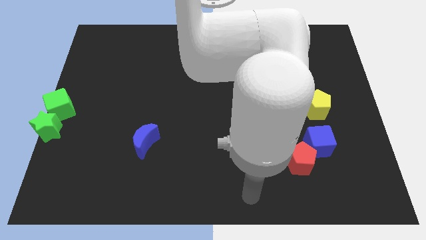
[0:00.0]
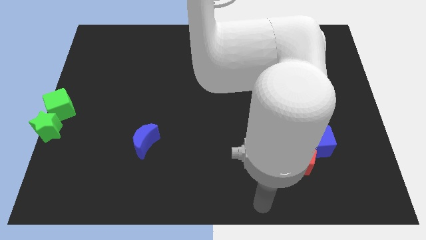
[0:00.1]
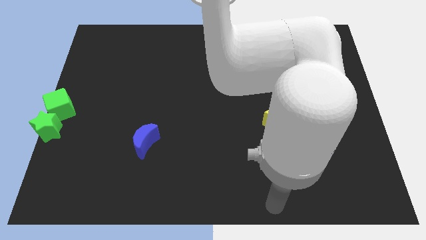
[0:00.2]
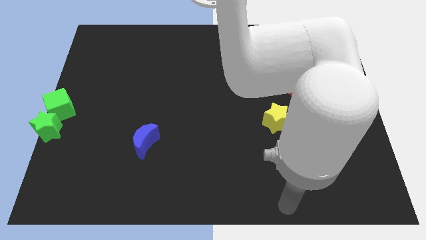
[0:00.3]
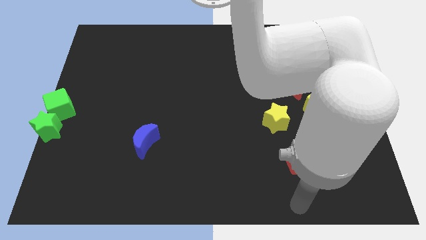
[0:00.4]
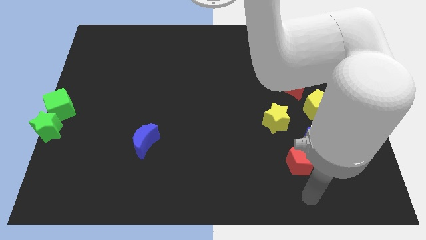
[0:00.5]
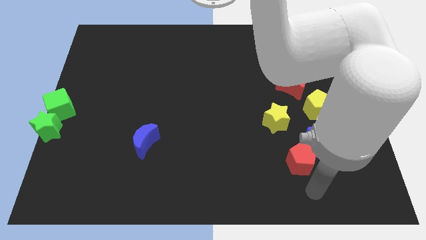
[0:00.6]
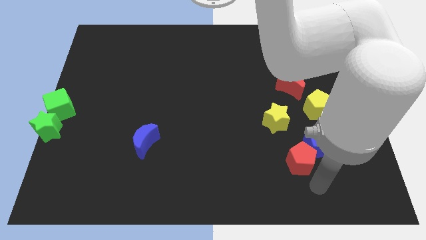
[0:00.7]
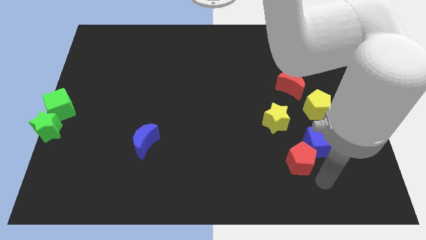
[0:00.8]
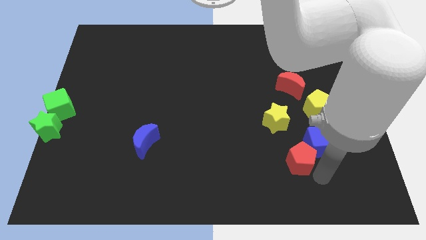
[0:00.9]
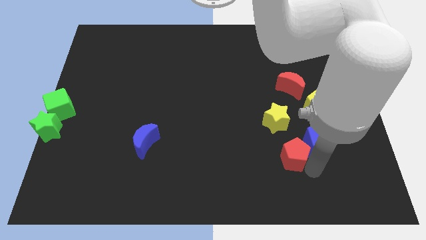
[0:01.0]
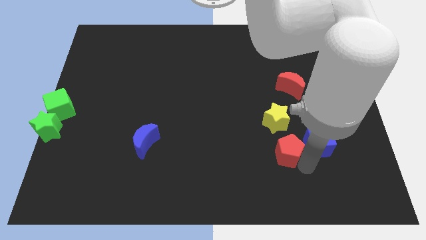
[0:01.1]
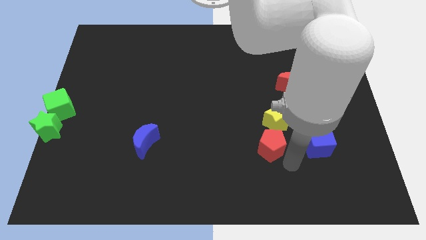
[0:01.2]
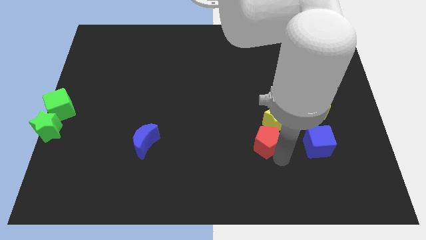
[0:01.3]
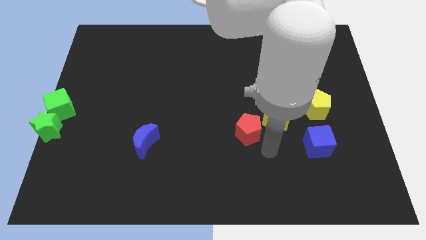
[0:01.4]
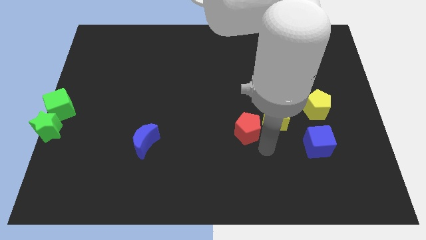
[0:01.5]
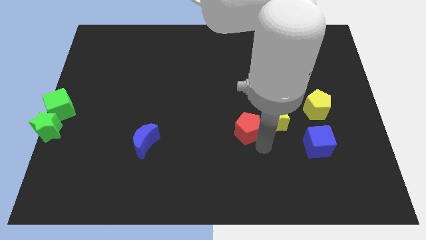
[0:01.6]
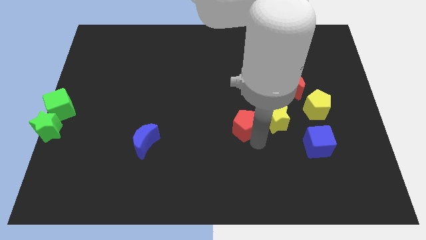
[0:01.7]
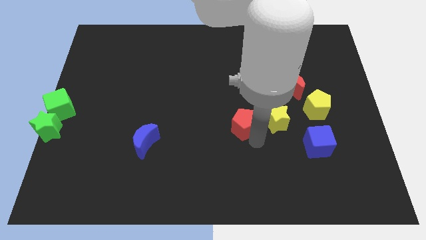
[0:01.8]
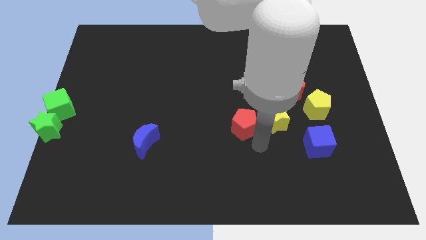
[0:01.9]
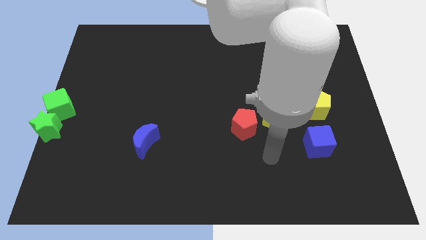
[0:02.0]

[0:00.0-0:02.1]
move the red pentagon to the left side of the yellow star

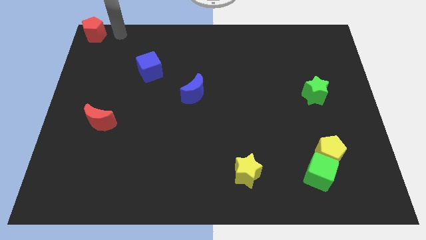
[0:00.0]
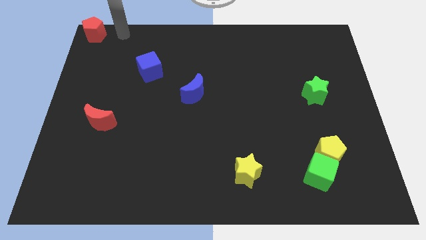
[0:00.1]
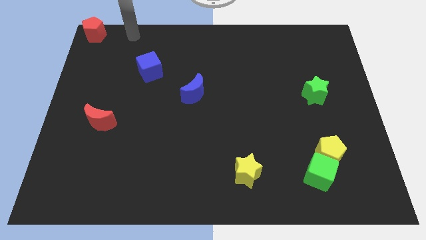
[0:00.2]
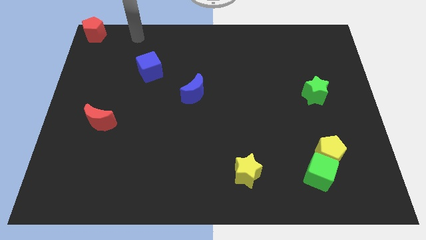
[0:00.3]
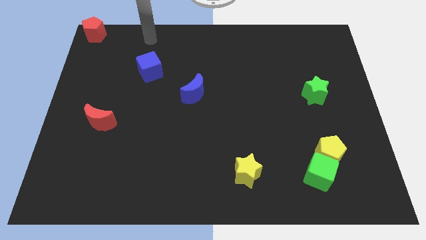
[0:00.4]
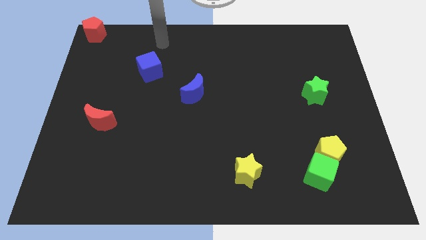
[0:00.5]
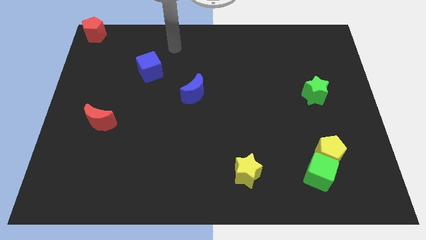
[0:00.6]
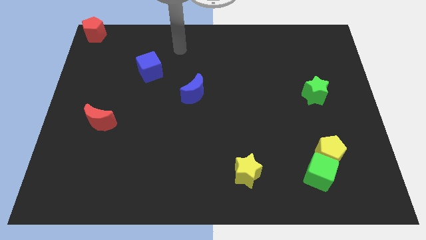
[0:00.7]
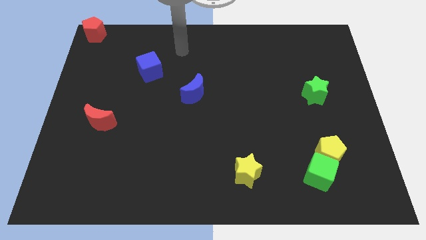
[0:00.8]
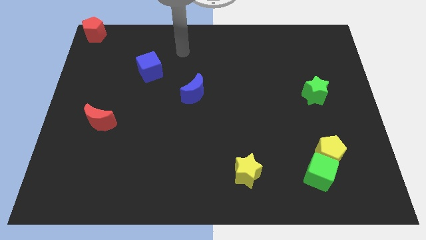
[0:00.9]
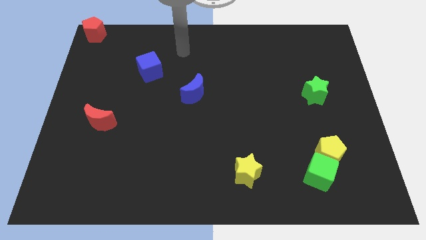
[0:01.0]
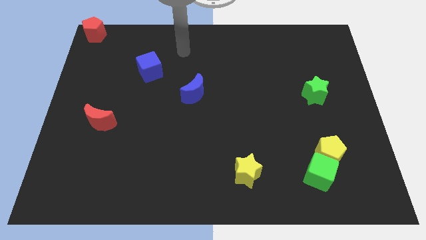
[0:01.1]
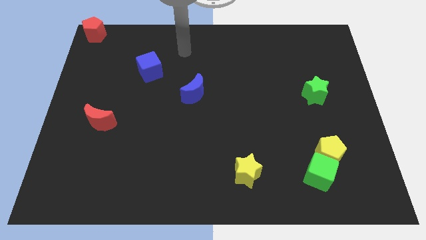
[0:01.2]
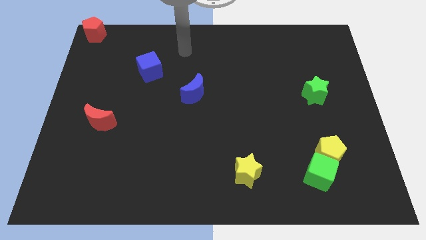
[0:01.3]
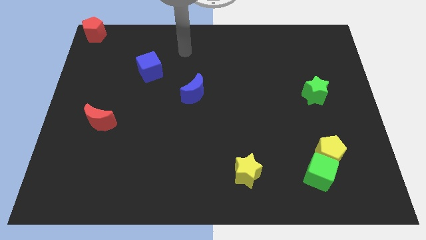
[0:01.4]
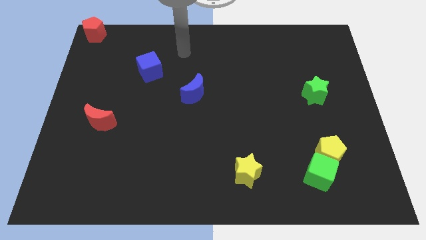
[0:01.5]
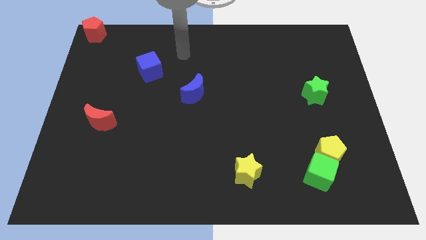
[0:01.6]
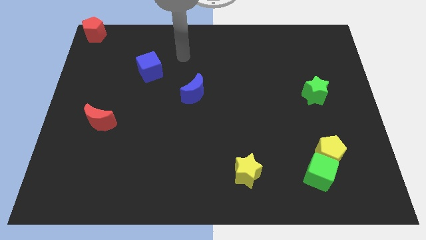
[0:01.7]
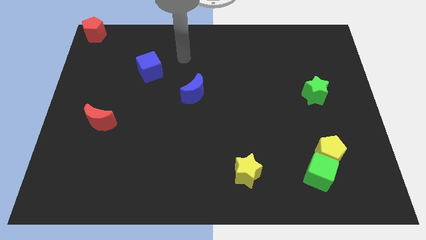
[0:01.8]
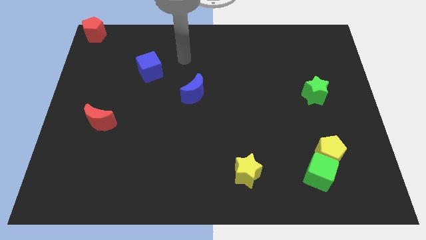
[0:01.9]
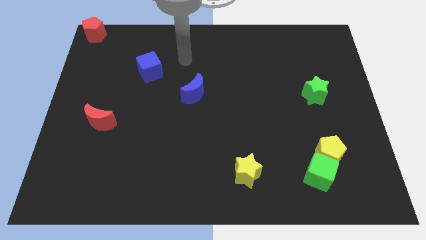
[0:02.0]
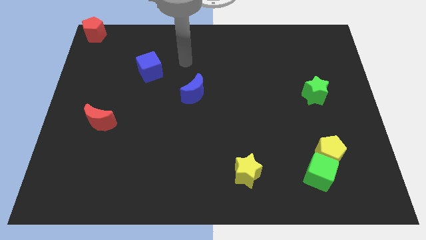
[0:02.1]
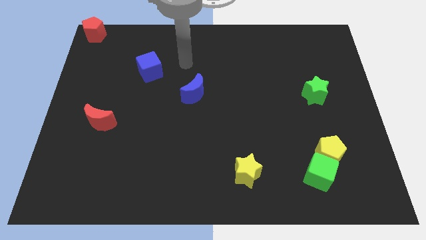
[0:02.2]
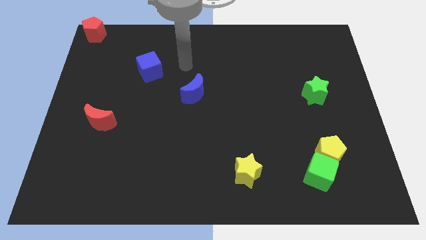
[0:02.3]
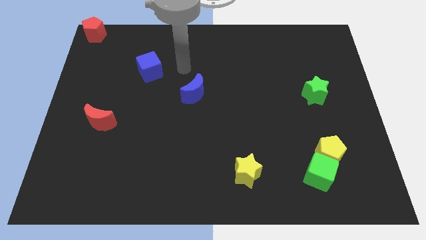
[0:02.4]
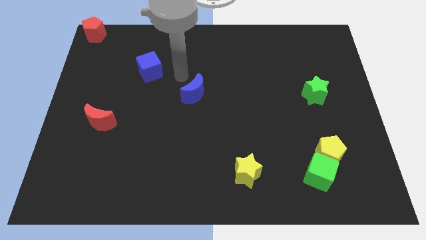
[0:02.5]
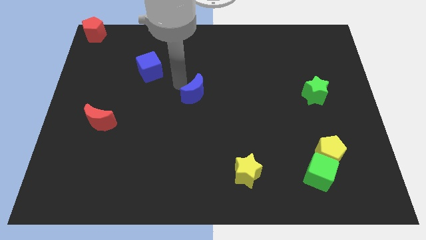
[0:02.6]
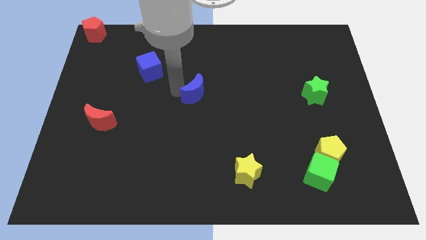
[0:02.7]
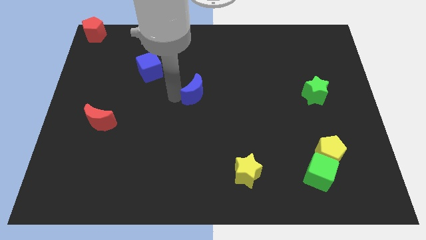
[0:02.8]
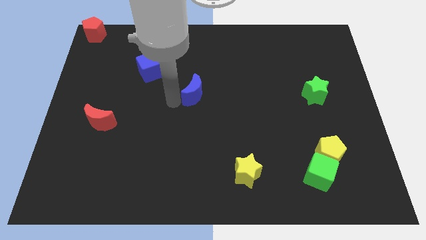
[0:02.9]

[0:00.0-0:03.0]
point your arm close to blue moon

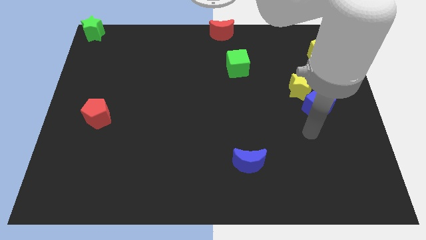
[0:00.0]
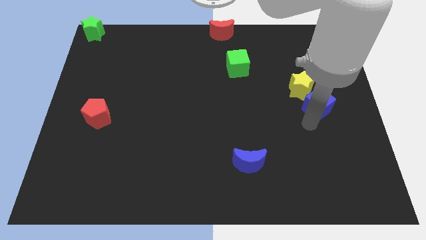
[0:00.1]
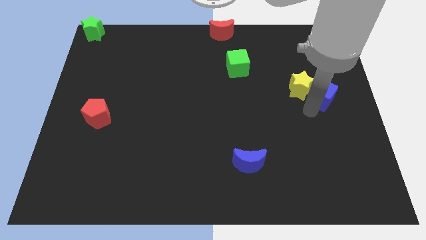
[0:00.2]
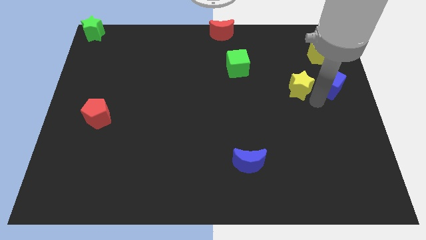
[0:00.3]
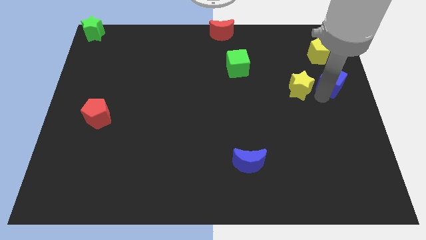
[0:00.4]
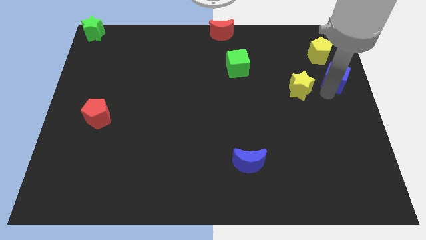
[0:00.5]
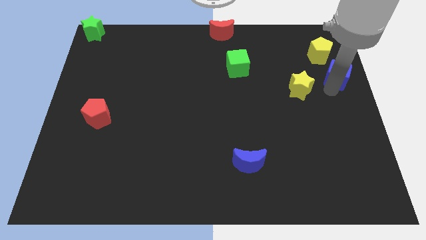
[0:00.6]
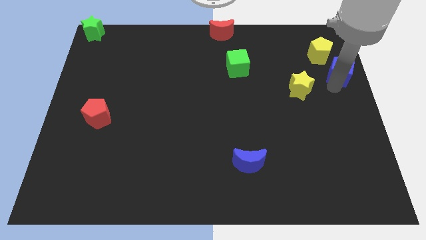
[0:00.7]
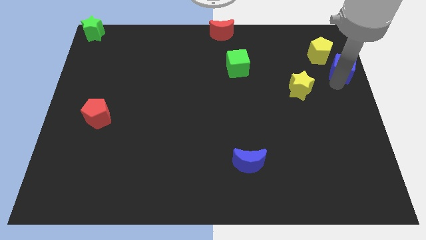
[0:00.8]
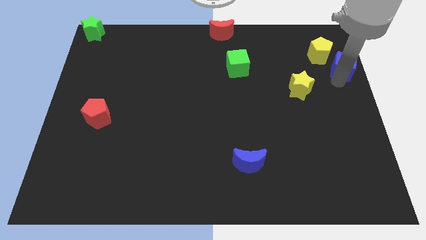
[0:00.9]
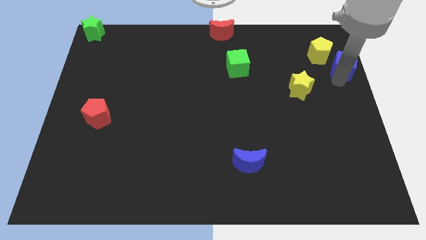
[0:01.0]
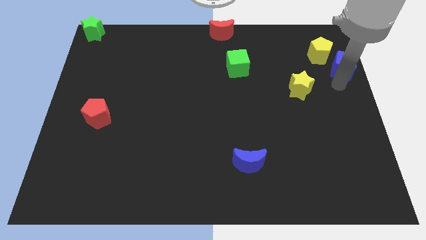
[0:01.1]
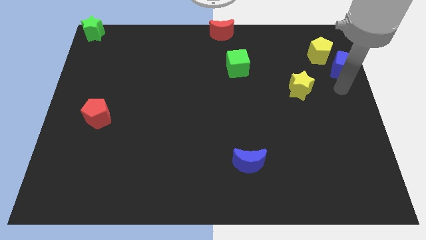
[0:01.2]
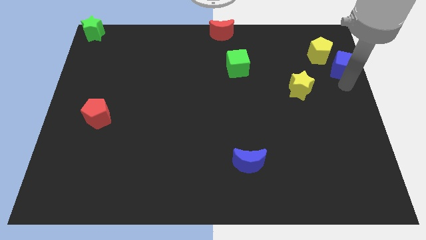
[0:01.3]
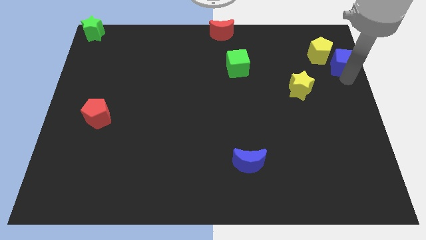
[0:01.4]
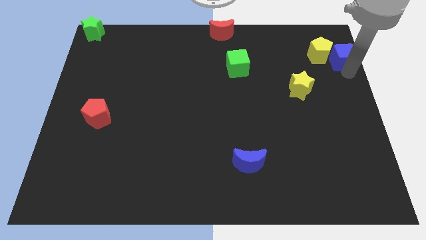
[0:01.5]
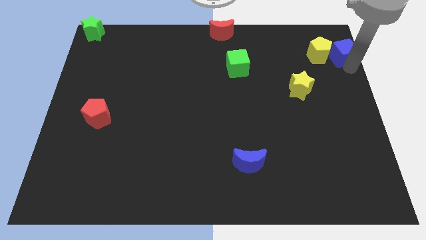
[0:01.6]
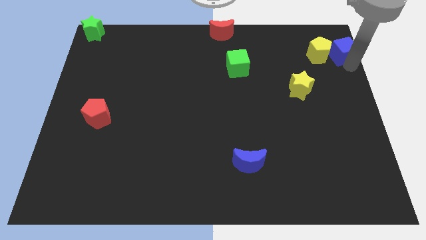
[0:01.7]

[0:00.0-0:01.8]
push the blue cube towards the right of yellow pentagon

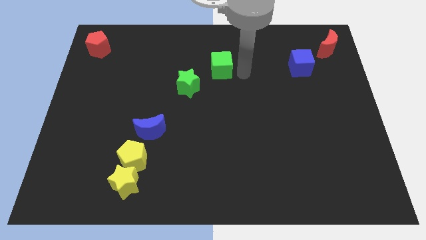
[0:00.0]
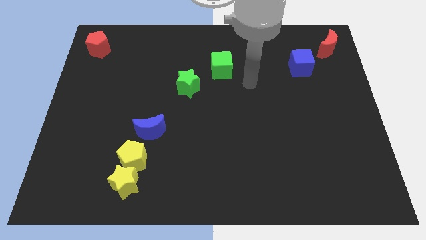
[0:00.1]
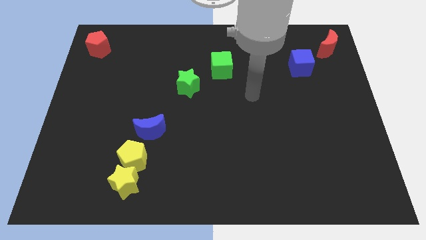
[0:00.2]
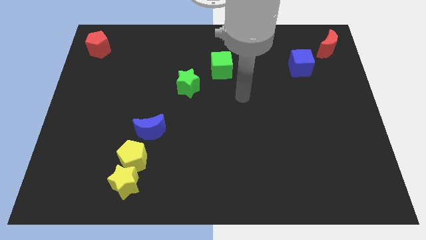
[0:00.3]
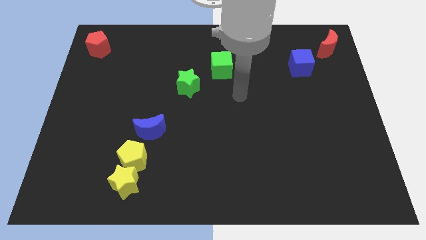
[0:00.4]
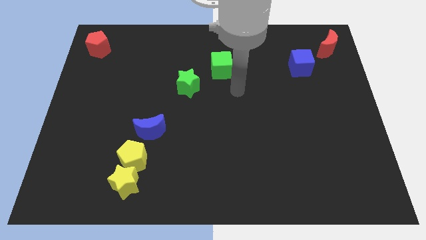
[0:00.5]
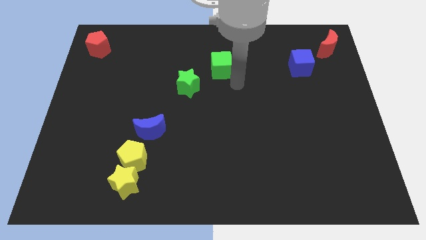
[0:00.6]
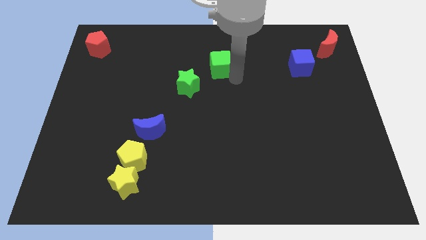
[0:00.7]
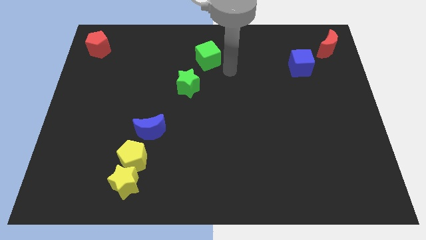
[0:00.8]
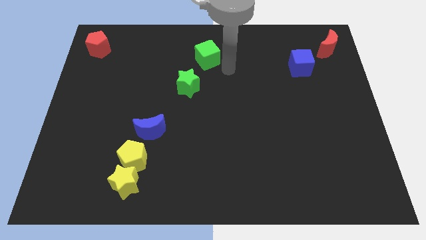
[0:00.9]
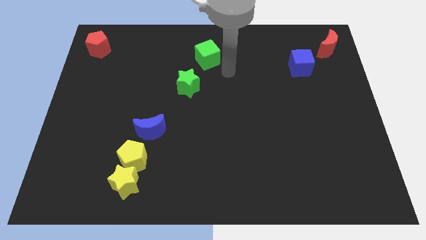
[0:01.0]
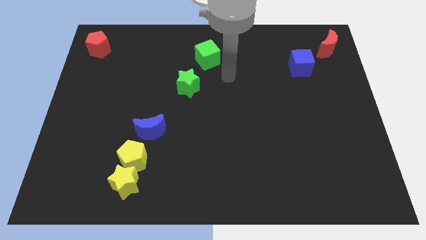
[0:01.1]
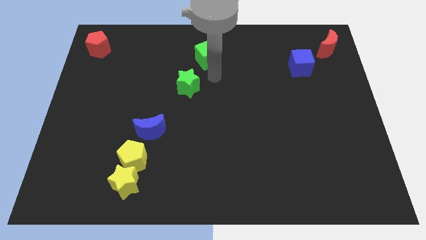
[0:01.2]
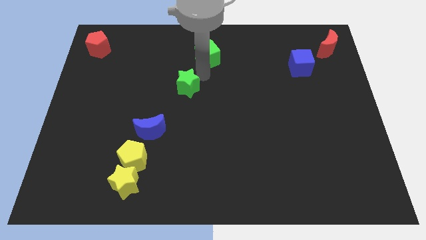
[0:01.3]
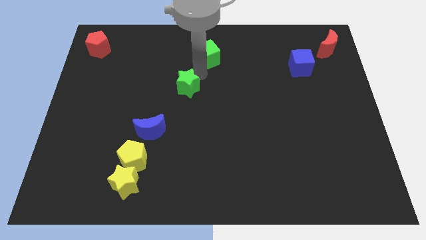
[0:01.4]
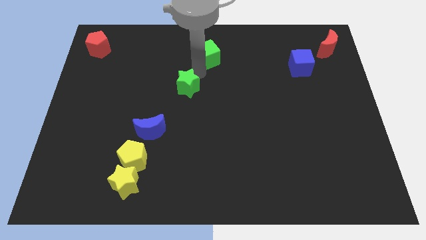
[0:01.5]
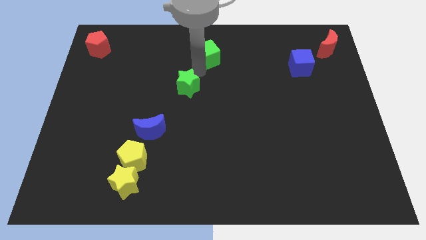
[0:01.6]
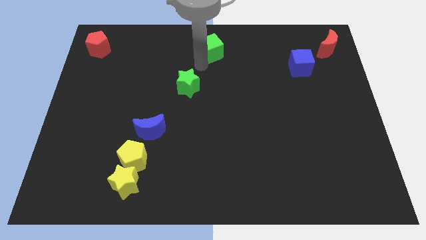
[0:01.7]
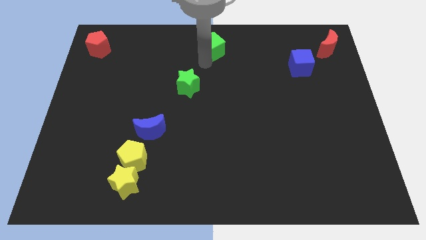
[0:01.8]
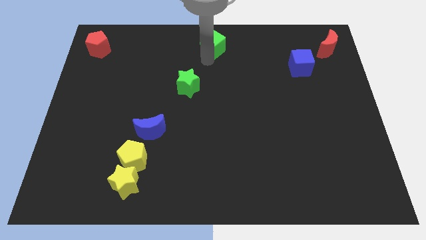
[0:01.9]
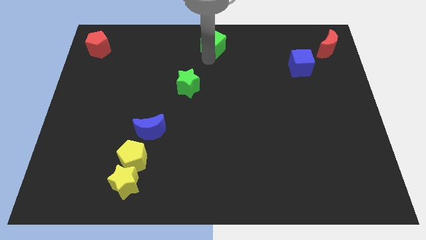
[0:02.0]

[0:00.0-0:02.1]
place the green cube at the top center
